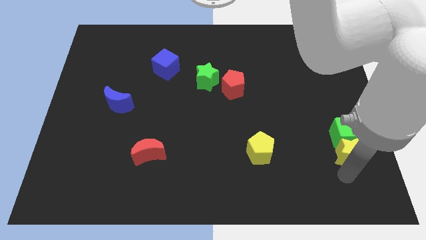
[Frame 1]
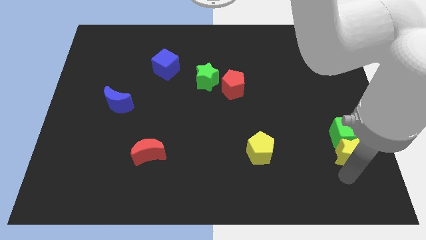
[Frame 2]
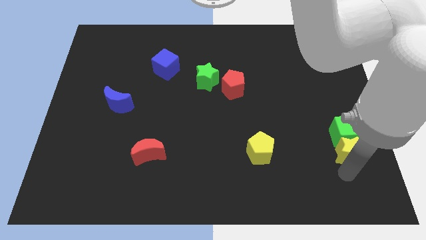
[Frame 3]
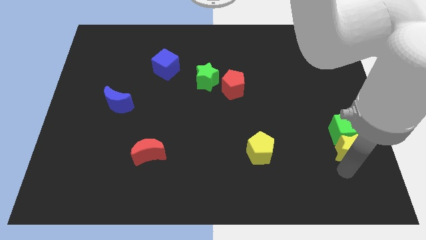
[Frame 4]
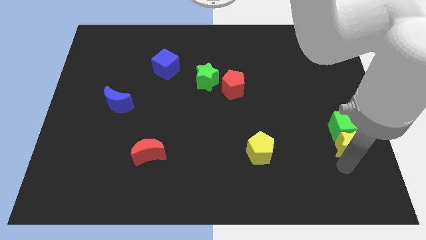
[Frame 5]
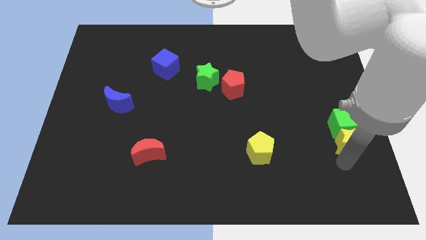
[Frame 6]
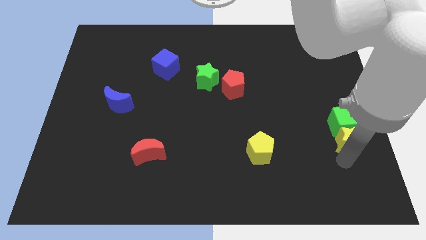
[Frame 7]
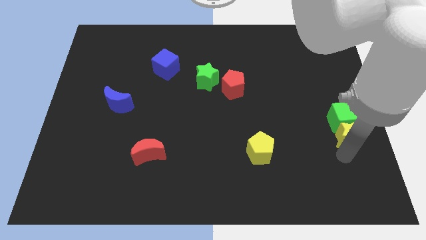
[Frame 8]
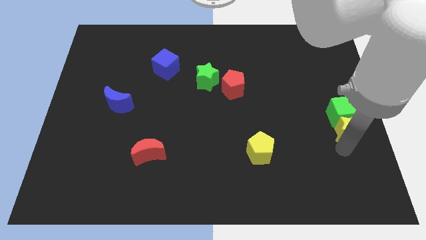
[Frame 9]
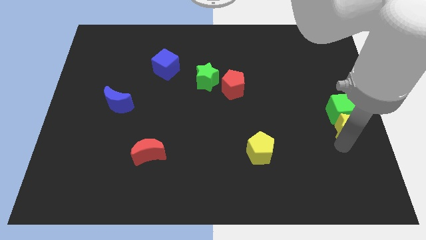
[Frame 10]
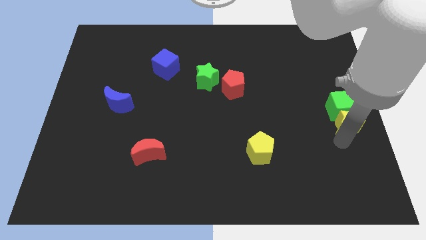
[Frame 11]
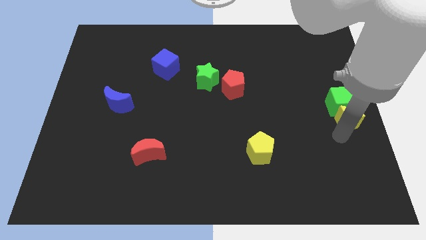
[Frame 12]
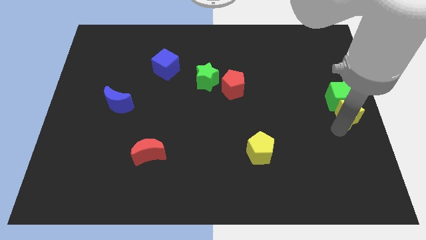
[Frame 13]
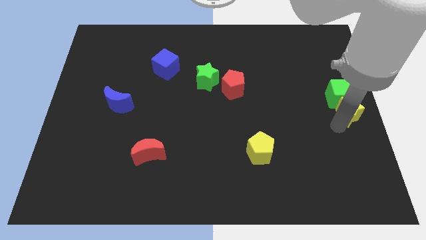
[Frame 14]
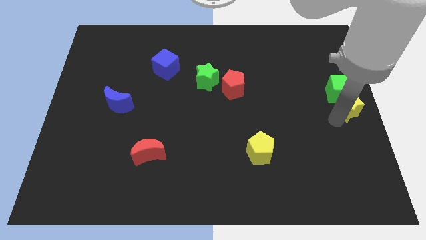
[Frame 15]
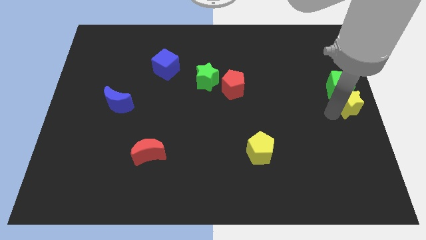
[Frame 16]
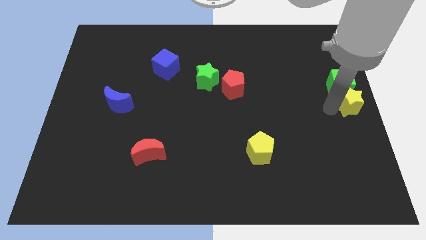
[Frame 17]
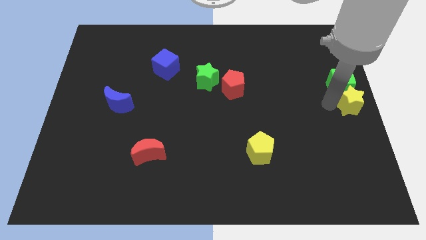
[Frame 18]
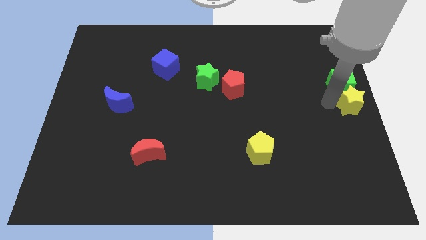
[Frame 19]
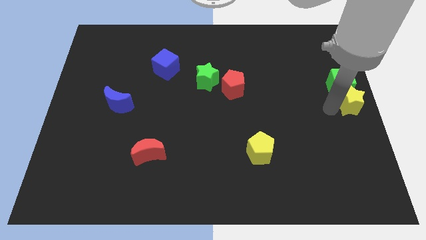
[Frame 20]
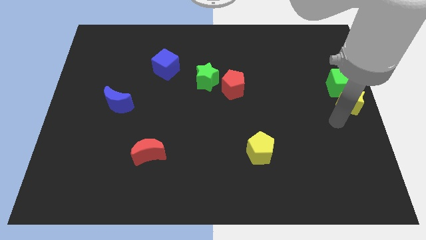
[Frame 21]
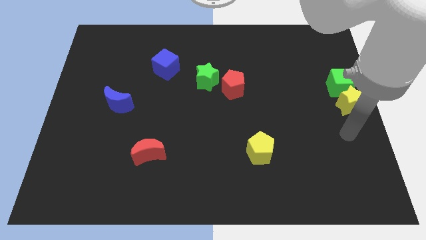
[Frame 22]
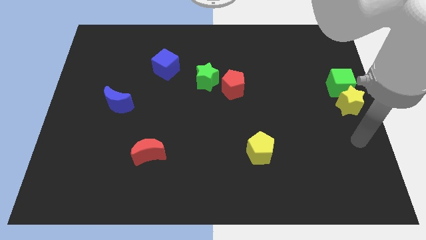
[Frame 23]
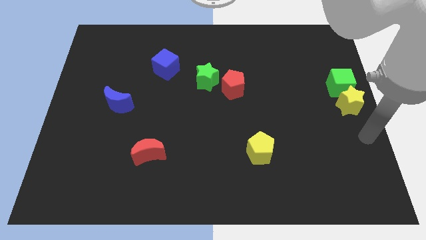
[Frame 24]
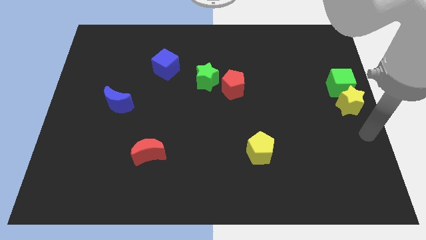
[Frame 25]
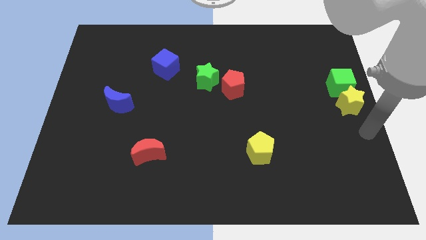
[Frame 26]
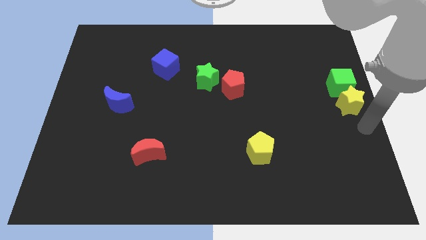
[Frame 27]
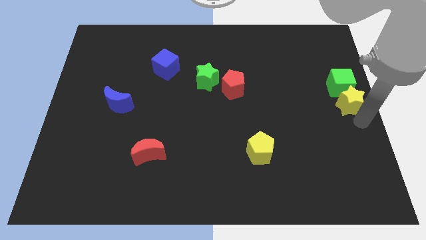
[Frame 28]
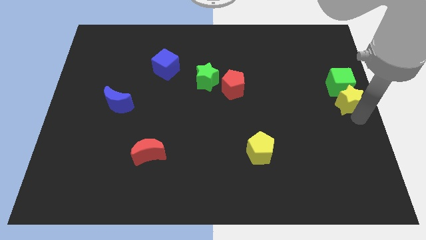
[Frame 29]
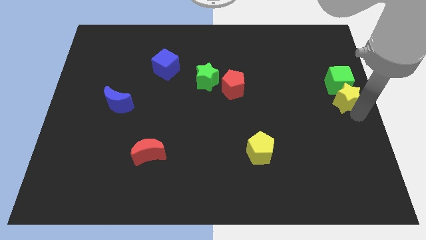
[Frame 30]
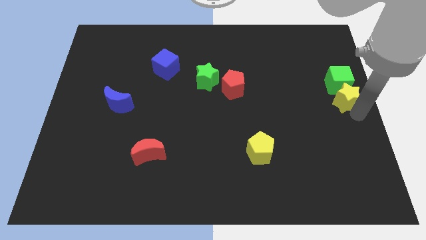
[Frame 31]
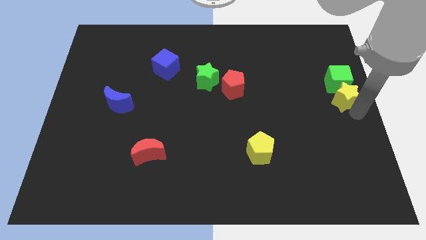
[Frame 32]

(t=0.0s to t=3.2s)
slide the yellow star along with the green cube towards up

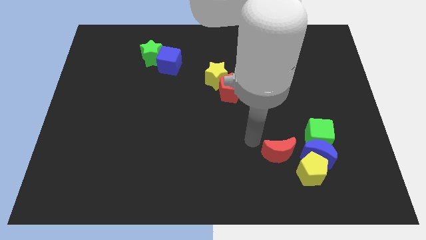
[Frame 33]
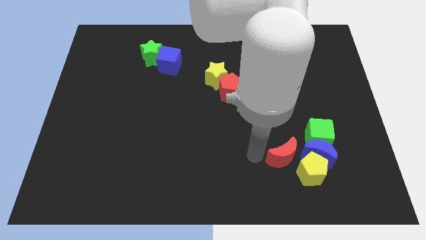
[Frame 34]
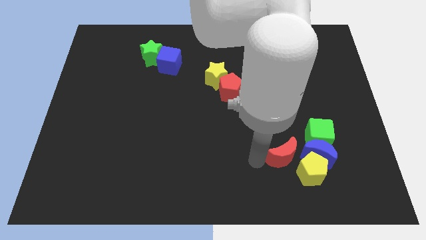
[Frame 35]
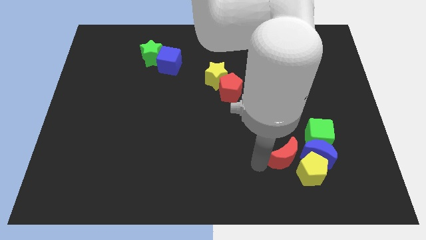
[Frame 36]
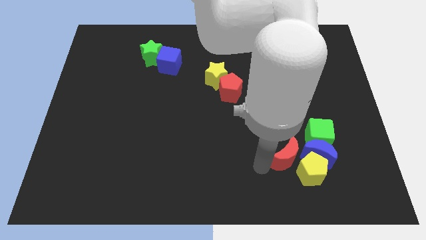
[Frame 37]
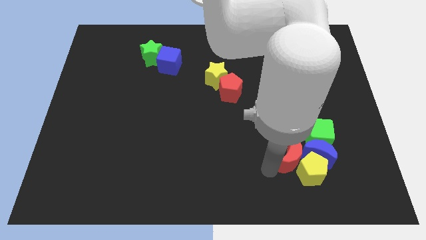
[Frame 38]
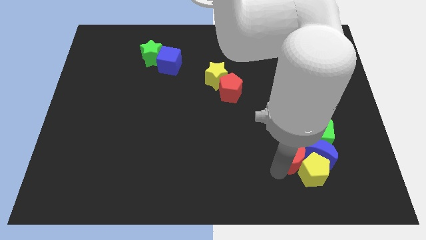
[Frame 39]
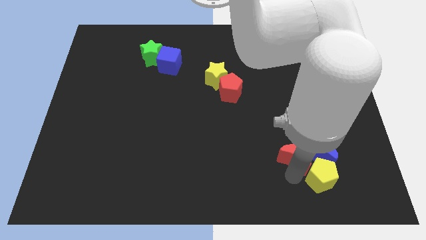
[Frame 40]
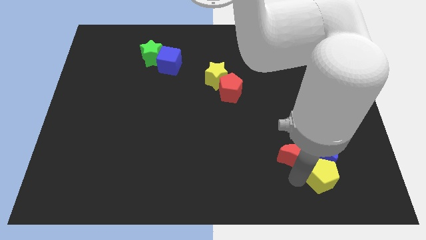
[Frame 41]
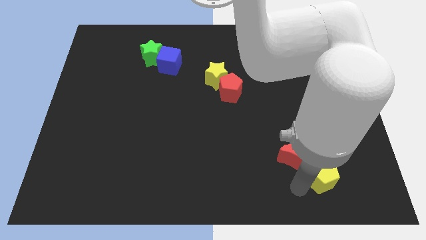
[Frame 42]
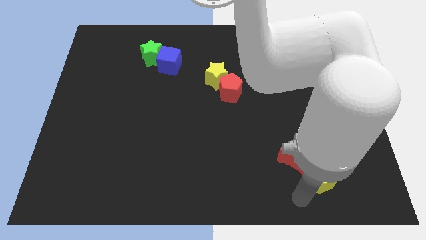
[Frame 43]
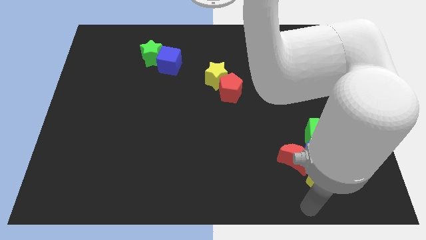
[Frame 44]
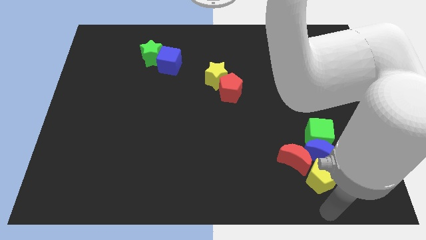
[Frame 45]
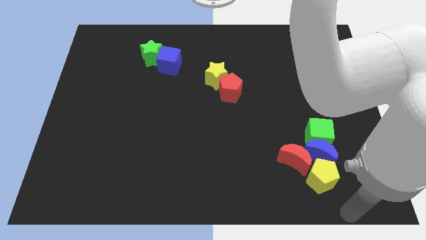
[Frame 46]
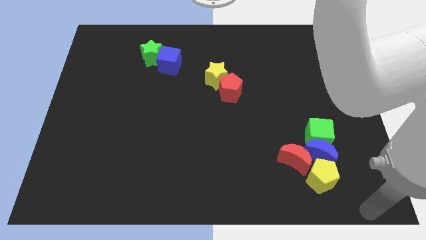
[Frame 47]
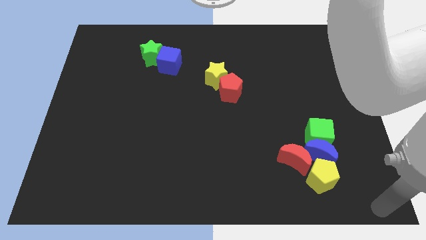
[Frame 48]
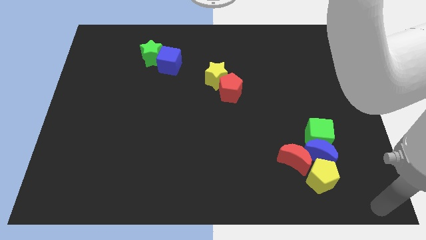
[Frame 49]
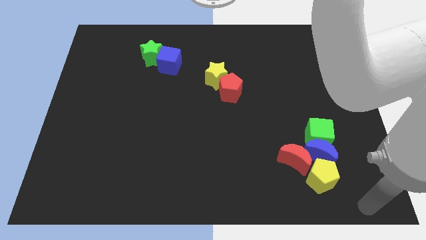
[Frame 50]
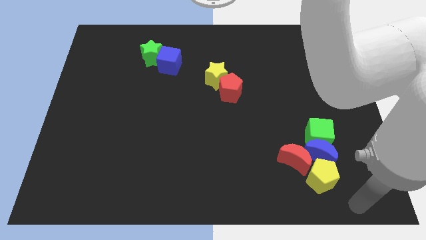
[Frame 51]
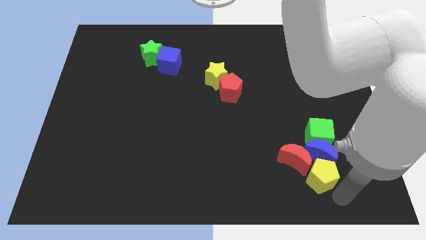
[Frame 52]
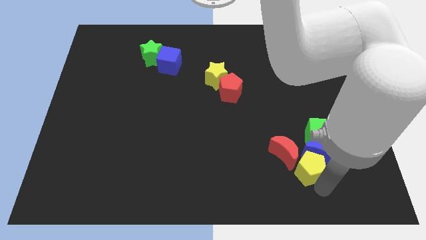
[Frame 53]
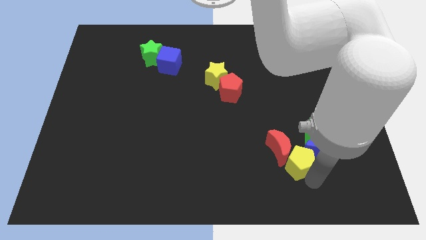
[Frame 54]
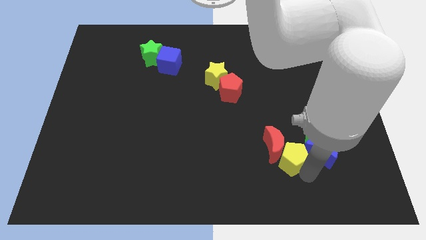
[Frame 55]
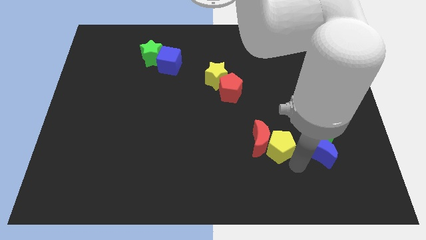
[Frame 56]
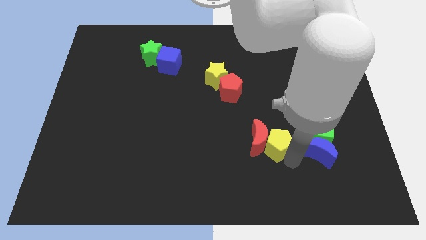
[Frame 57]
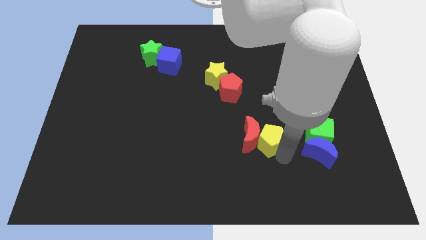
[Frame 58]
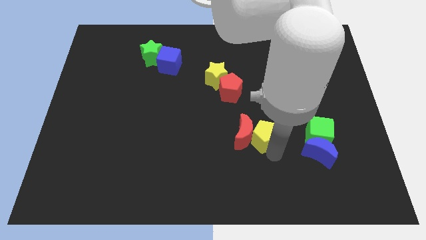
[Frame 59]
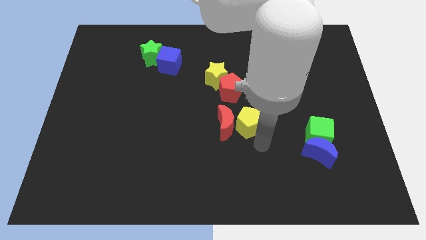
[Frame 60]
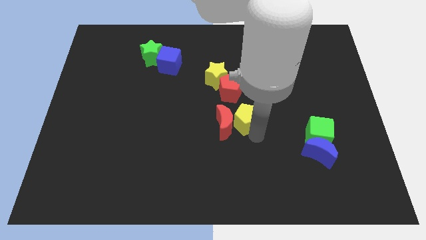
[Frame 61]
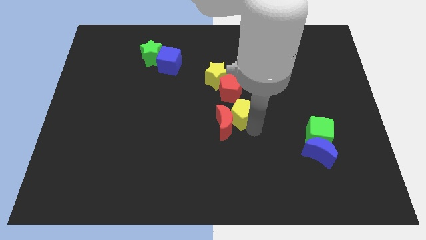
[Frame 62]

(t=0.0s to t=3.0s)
slightly push red moon and yellow pentagon to center

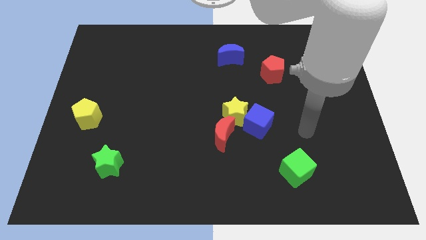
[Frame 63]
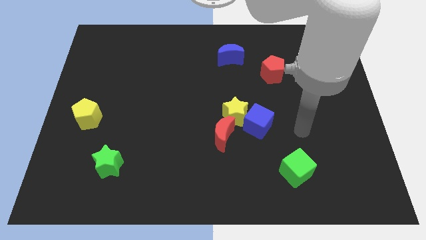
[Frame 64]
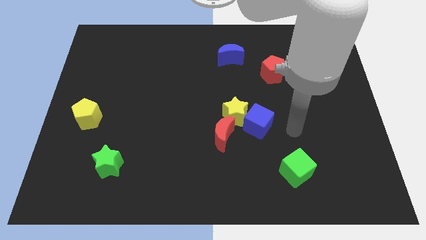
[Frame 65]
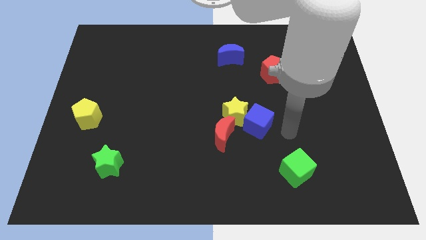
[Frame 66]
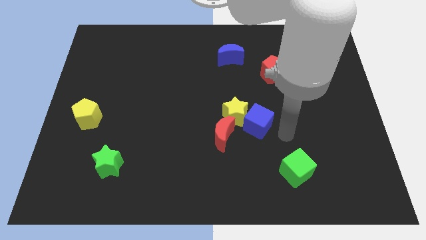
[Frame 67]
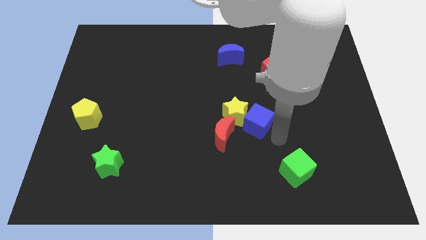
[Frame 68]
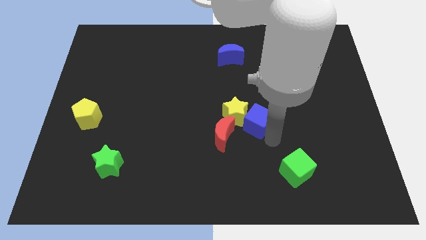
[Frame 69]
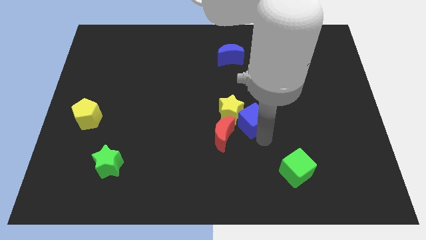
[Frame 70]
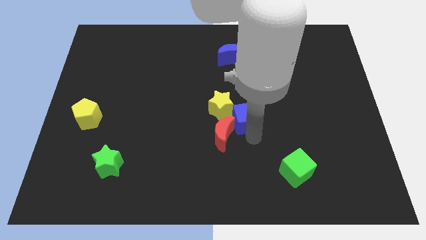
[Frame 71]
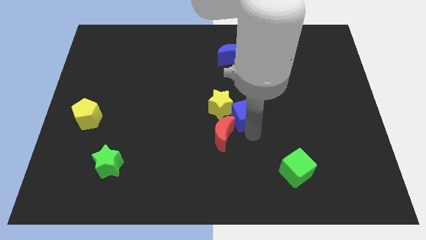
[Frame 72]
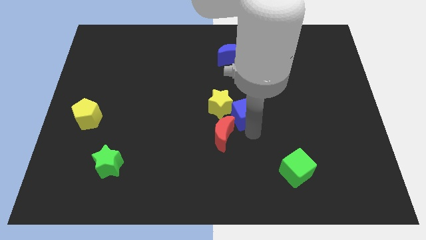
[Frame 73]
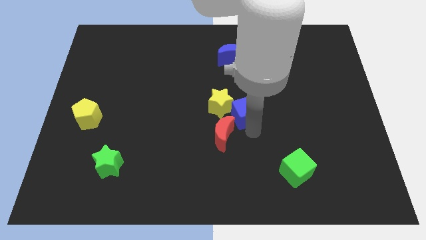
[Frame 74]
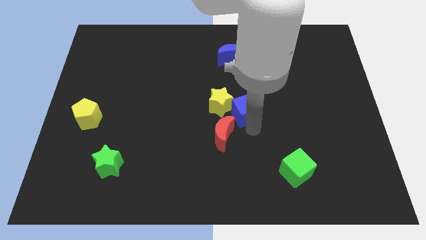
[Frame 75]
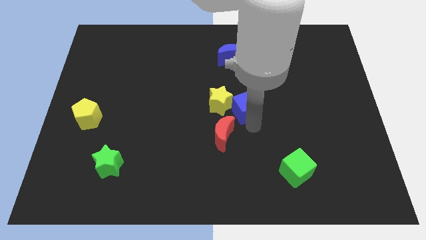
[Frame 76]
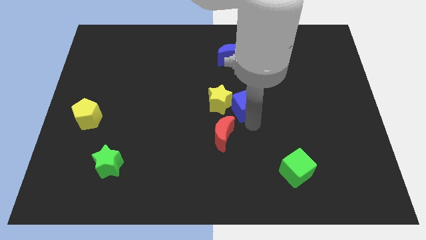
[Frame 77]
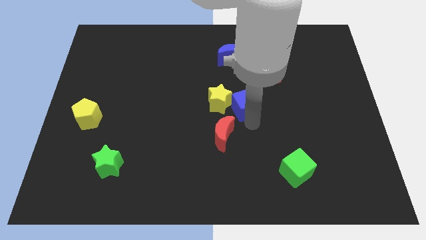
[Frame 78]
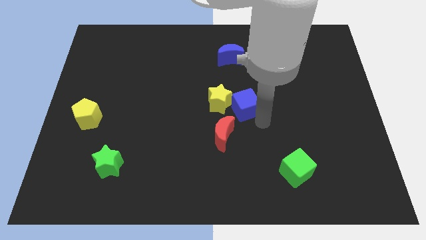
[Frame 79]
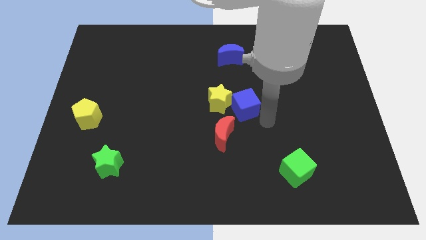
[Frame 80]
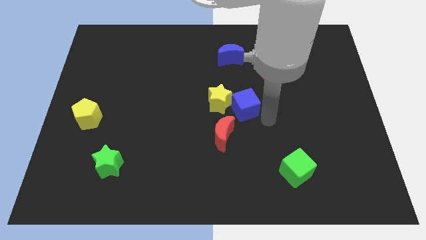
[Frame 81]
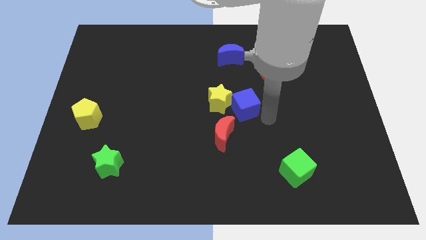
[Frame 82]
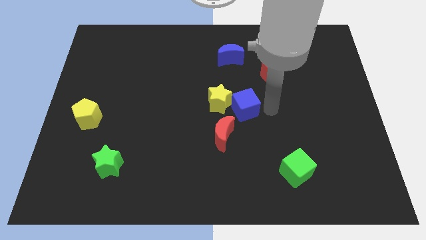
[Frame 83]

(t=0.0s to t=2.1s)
push the blue cube and the yellow star below the blue crescent

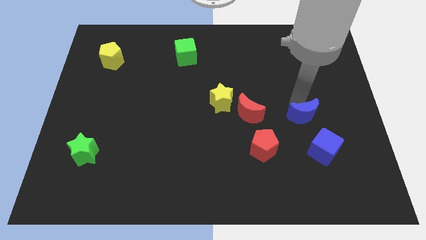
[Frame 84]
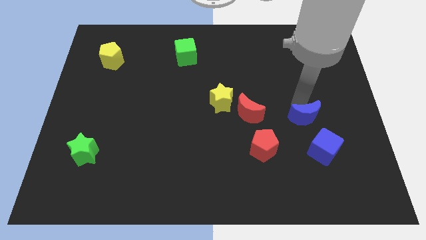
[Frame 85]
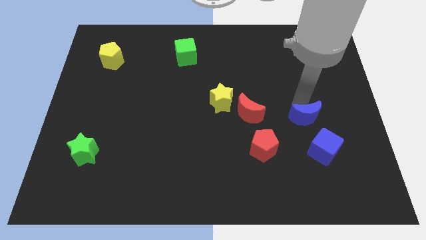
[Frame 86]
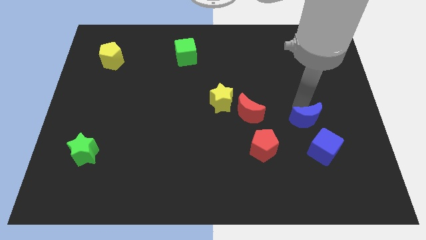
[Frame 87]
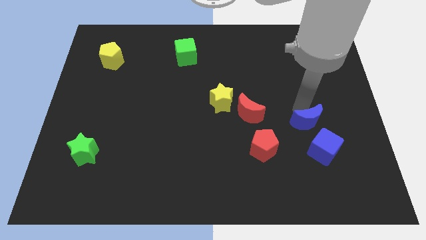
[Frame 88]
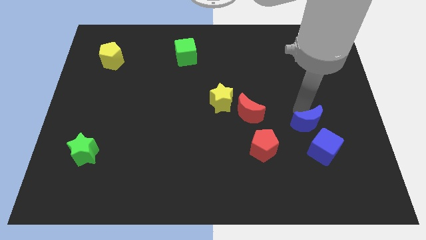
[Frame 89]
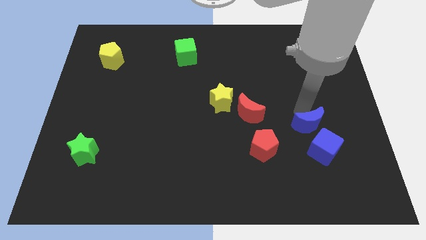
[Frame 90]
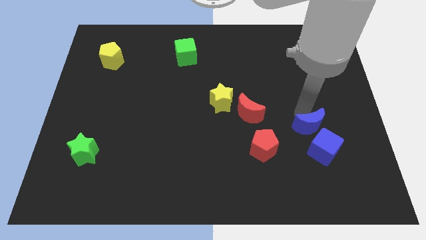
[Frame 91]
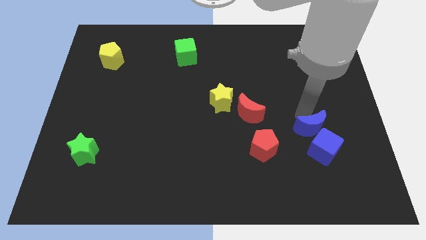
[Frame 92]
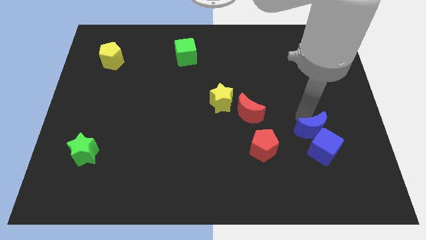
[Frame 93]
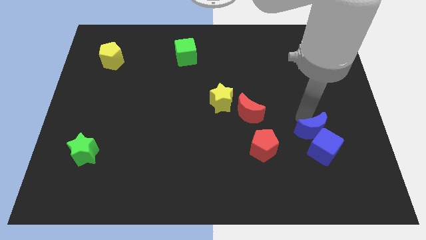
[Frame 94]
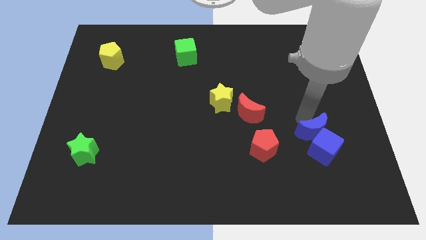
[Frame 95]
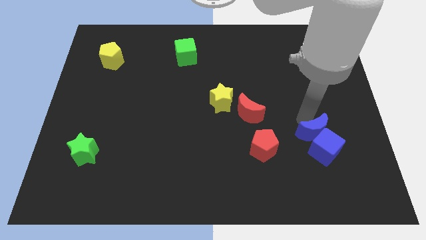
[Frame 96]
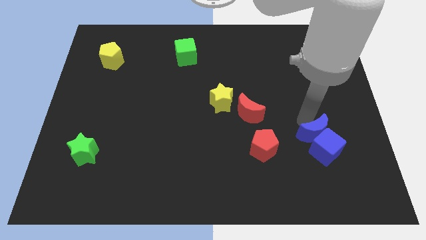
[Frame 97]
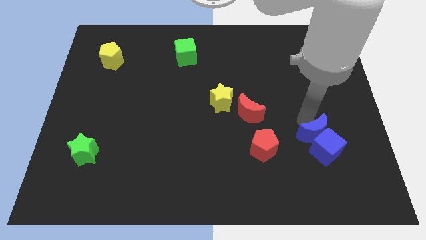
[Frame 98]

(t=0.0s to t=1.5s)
push blue crescent above blue cube
